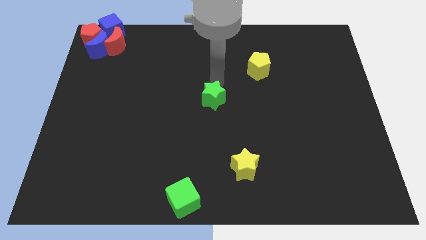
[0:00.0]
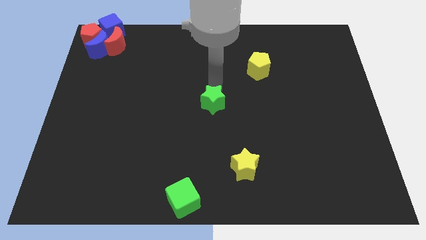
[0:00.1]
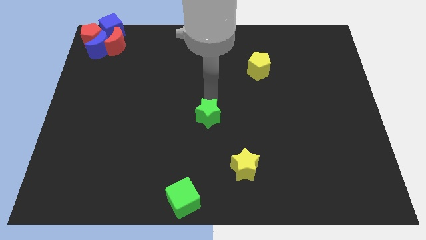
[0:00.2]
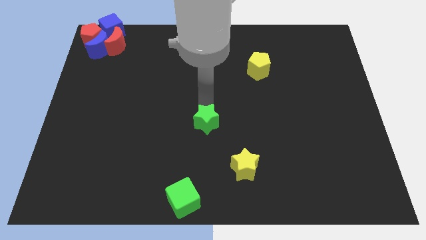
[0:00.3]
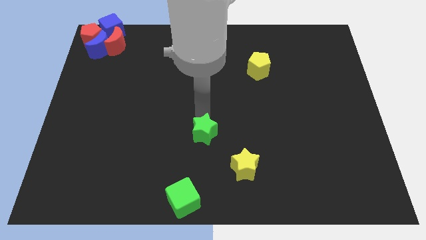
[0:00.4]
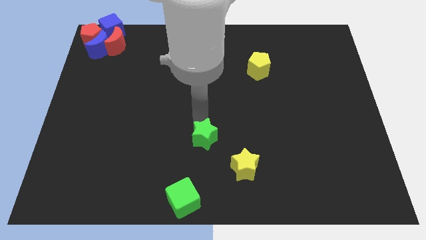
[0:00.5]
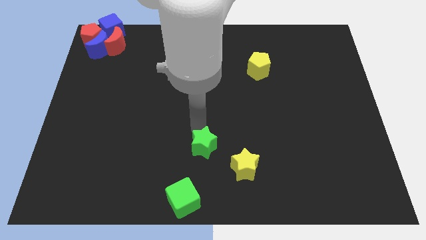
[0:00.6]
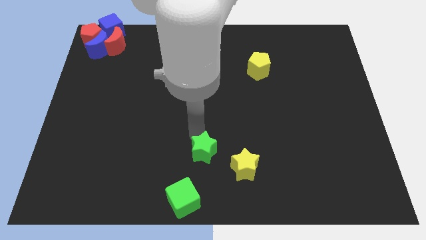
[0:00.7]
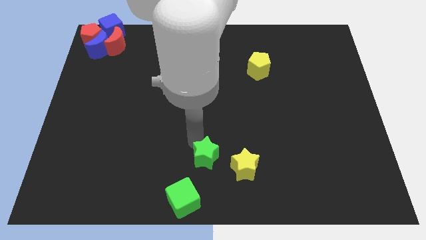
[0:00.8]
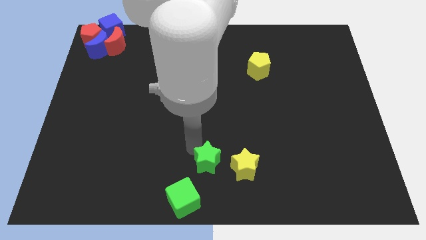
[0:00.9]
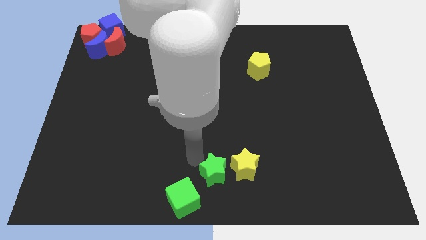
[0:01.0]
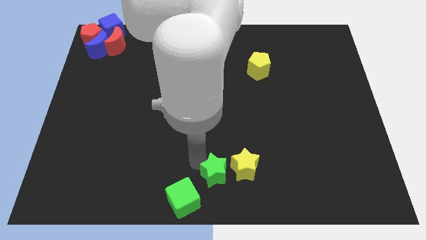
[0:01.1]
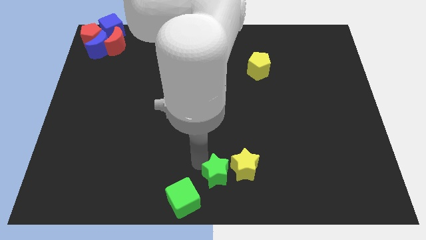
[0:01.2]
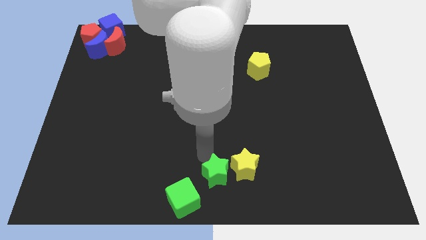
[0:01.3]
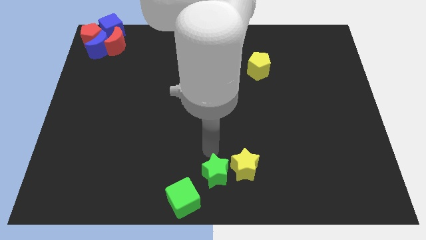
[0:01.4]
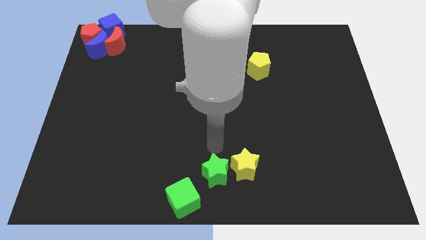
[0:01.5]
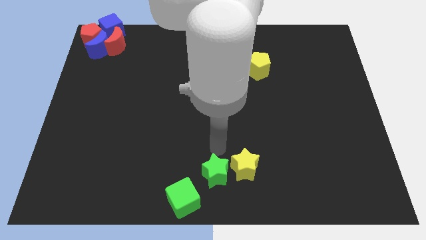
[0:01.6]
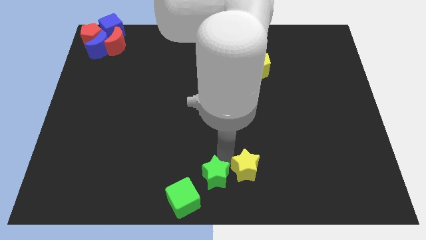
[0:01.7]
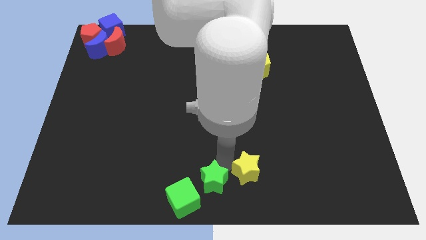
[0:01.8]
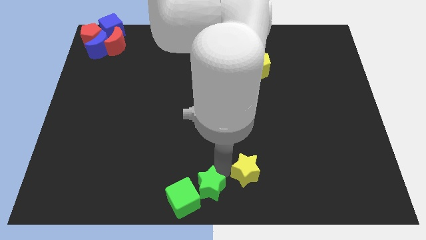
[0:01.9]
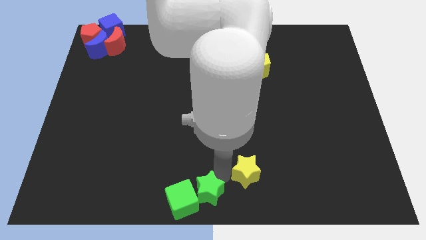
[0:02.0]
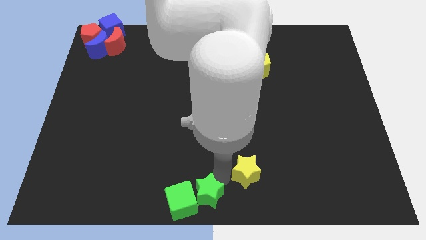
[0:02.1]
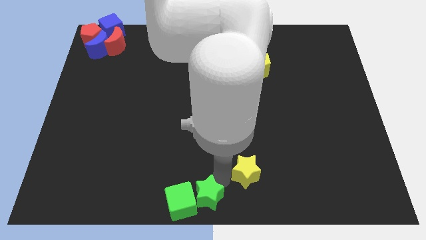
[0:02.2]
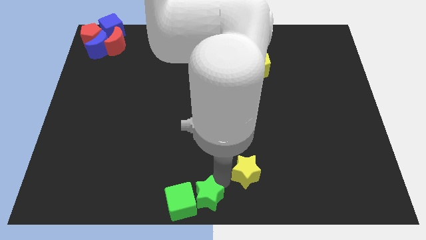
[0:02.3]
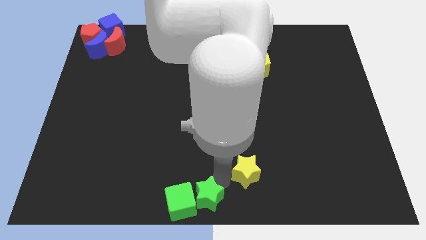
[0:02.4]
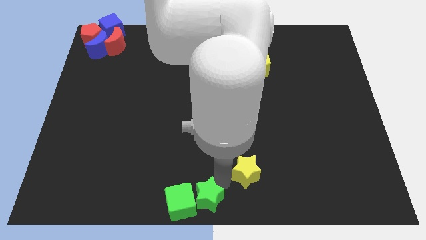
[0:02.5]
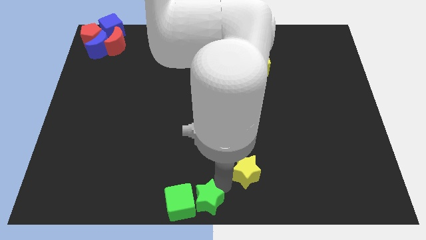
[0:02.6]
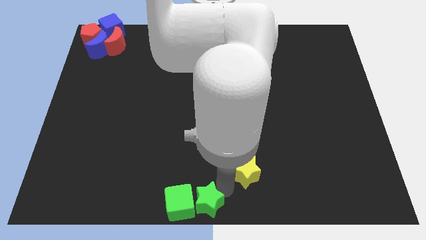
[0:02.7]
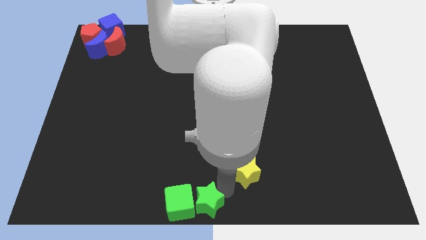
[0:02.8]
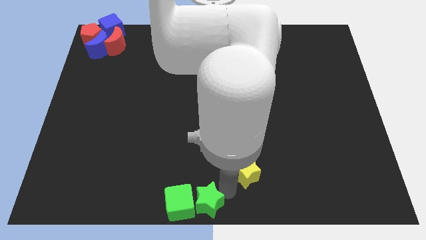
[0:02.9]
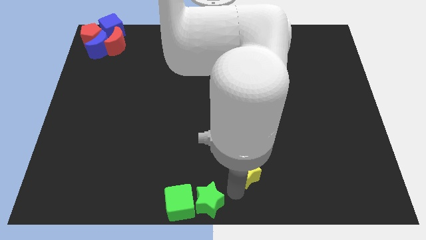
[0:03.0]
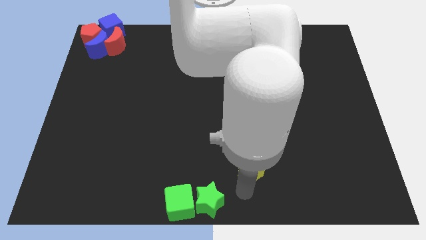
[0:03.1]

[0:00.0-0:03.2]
move the green star into the green cube at the bottom

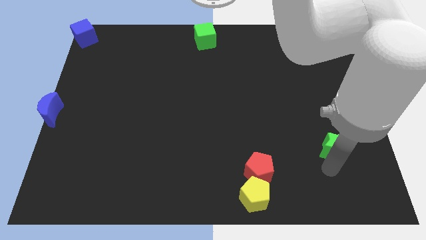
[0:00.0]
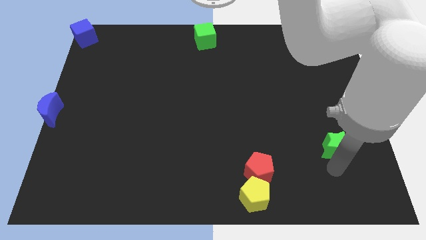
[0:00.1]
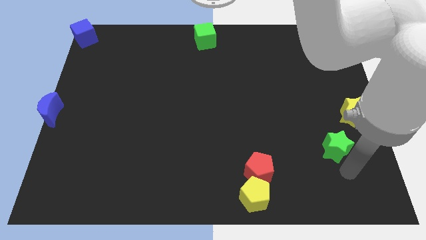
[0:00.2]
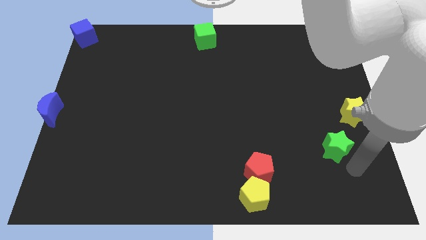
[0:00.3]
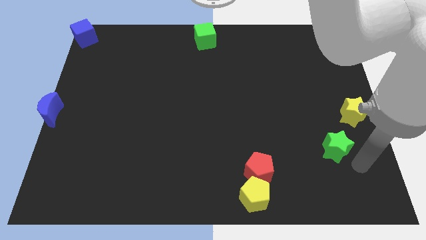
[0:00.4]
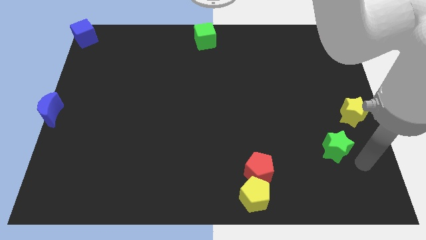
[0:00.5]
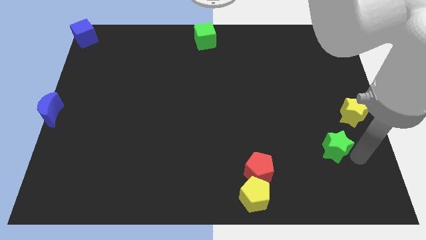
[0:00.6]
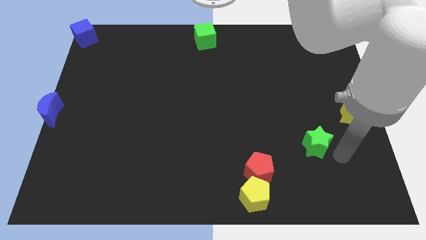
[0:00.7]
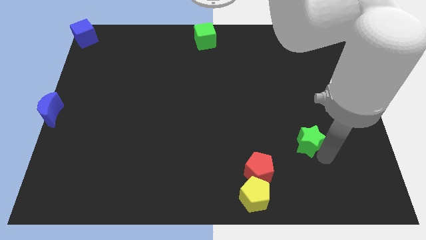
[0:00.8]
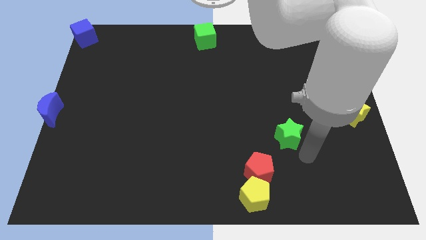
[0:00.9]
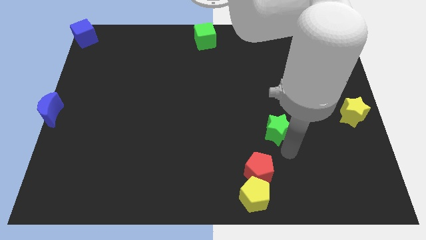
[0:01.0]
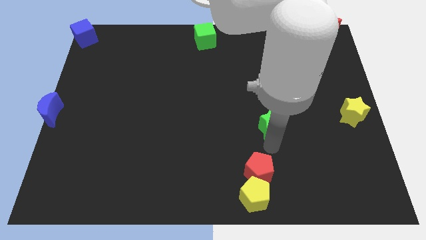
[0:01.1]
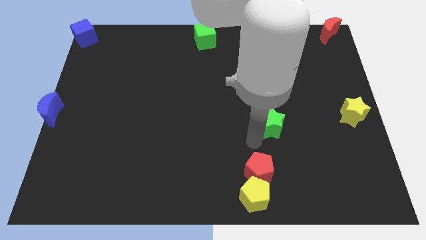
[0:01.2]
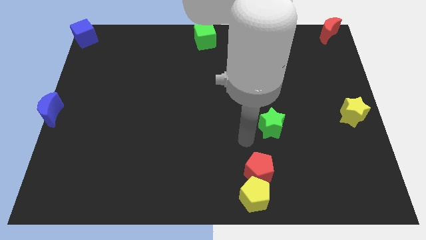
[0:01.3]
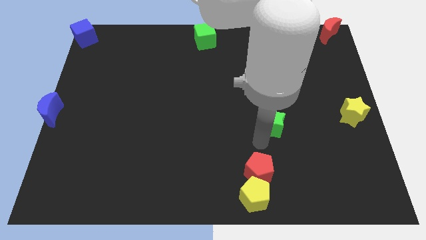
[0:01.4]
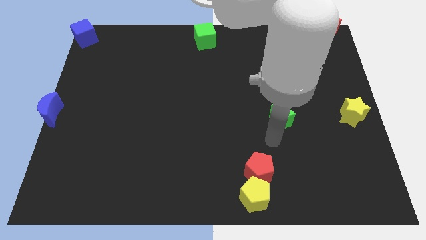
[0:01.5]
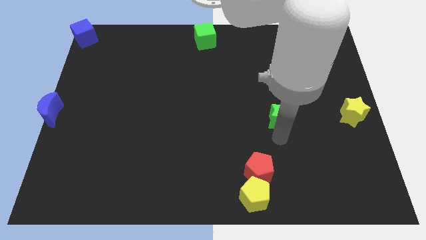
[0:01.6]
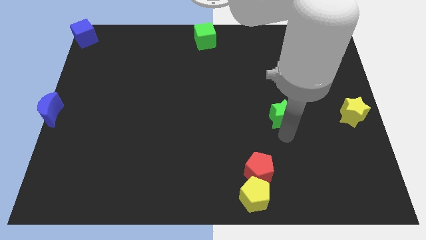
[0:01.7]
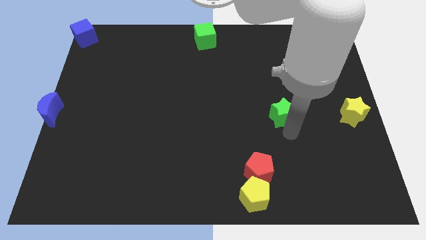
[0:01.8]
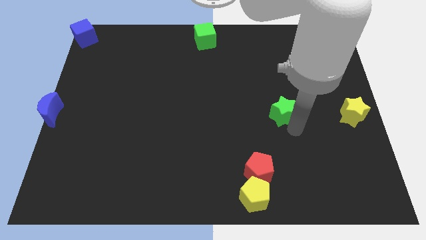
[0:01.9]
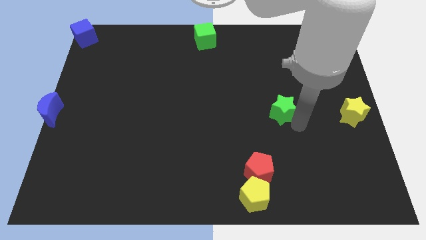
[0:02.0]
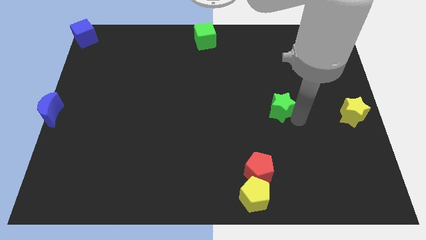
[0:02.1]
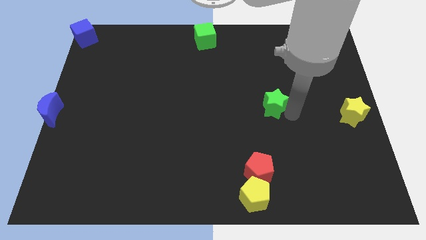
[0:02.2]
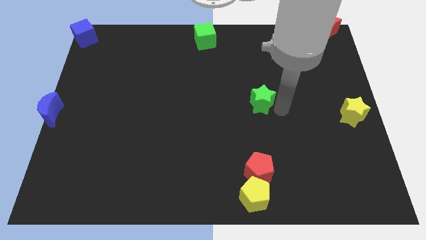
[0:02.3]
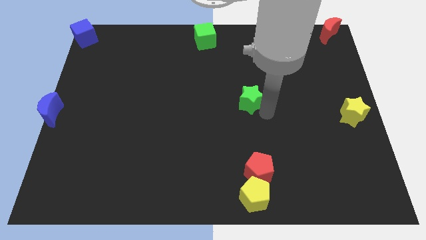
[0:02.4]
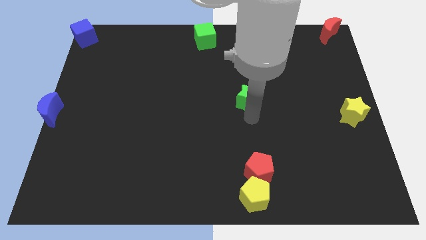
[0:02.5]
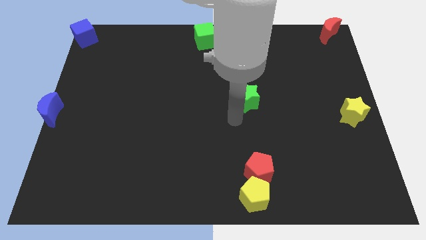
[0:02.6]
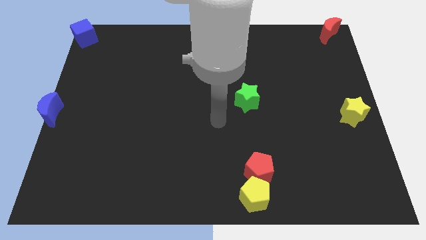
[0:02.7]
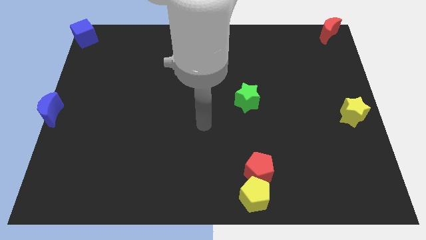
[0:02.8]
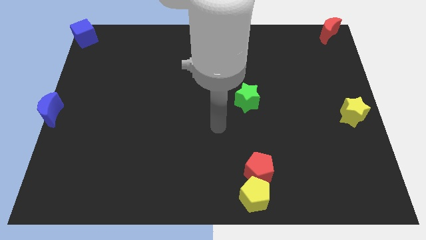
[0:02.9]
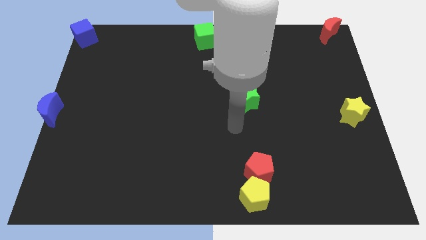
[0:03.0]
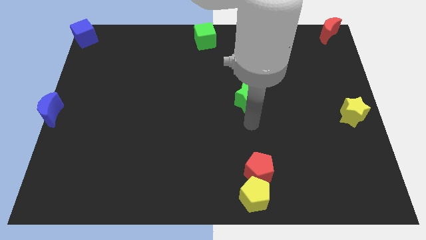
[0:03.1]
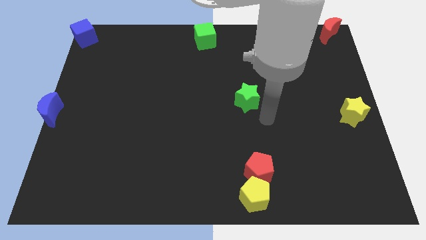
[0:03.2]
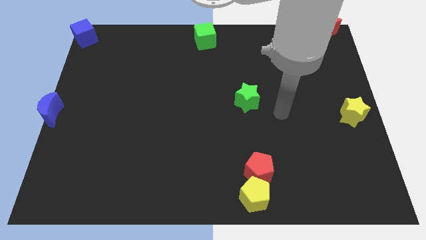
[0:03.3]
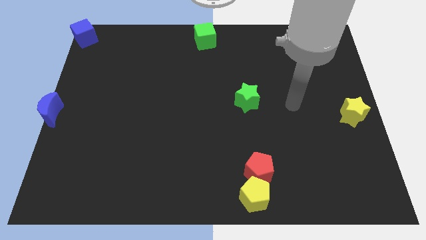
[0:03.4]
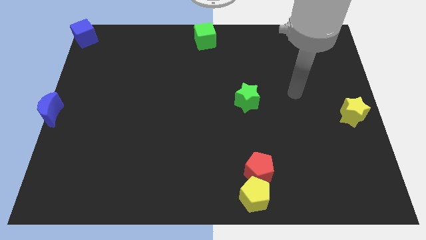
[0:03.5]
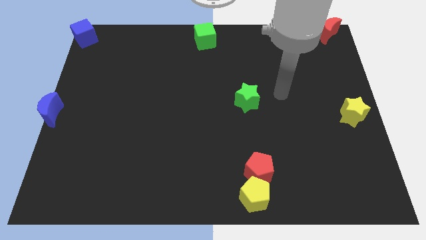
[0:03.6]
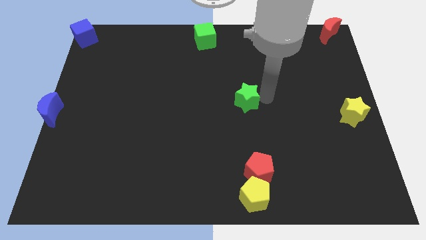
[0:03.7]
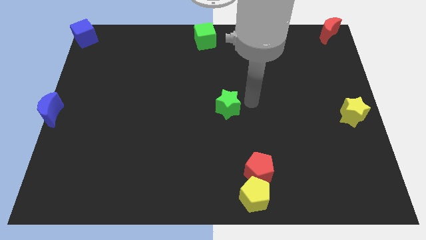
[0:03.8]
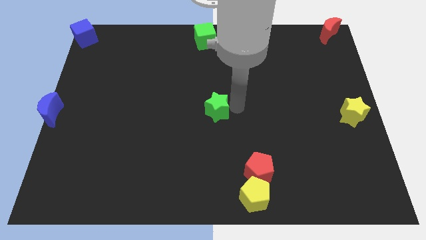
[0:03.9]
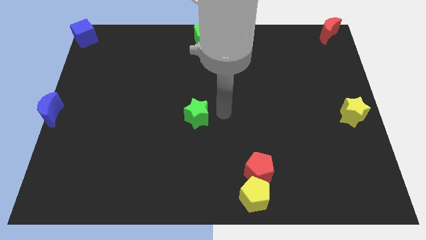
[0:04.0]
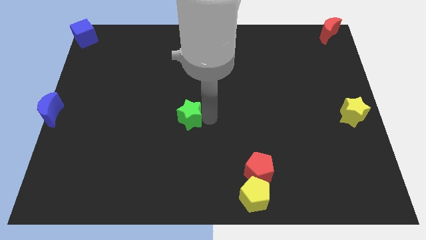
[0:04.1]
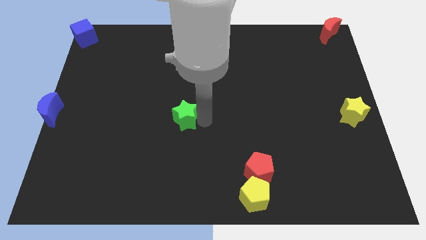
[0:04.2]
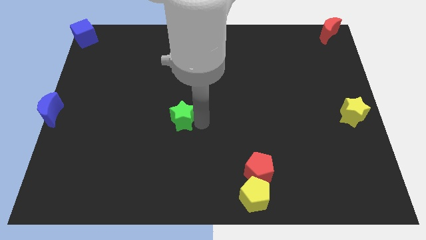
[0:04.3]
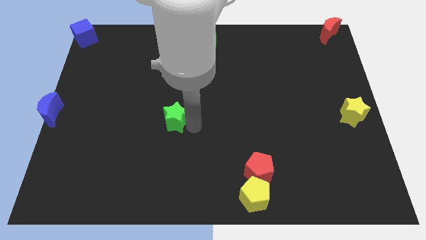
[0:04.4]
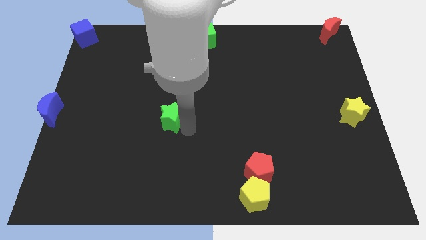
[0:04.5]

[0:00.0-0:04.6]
place the green star to the center

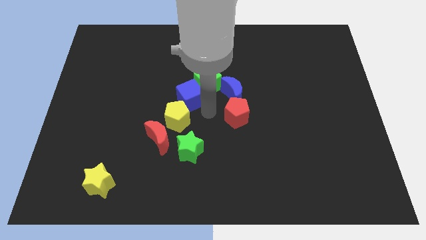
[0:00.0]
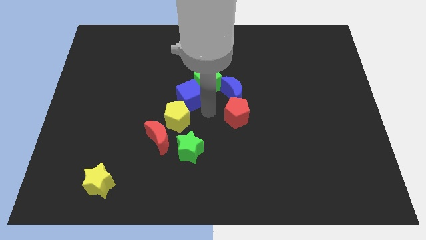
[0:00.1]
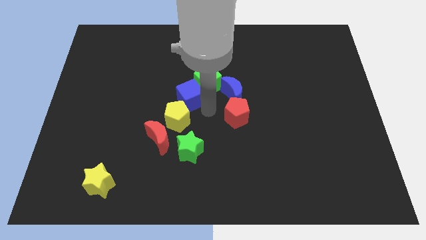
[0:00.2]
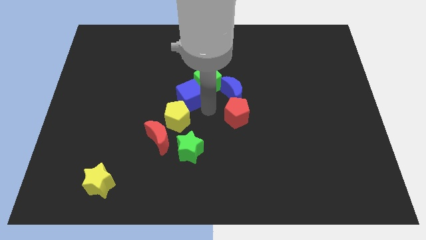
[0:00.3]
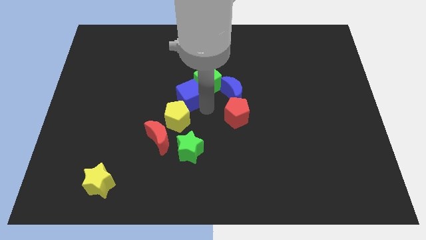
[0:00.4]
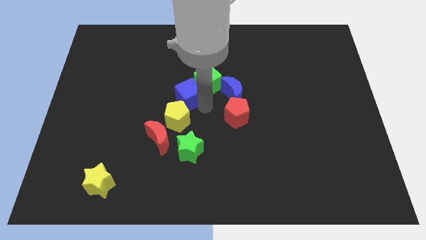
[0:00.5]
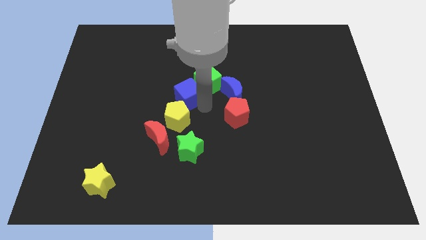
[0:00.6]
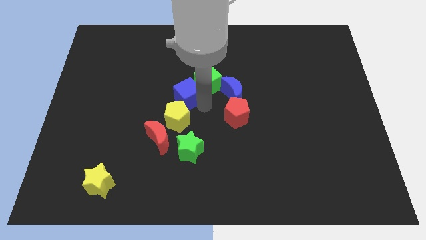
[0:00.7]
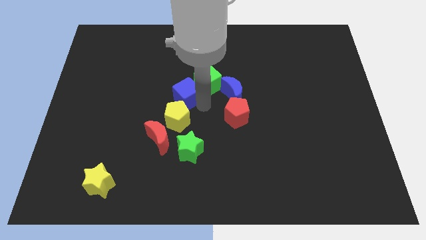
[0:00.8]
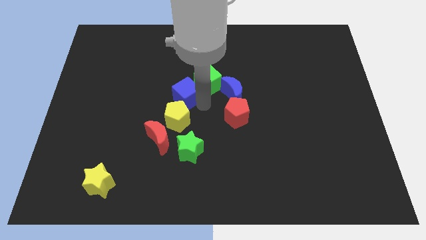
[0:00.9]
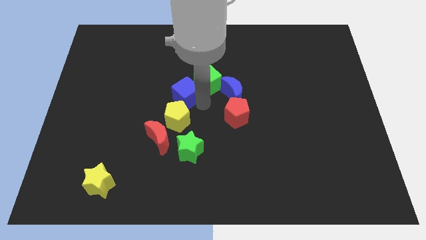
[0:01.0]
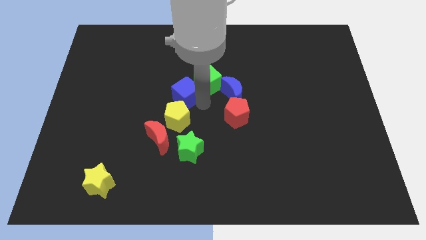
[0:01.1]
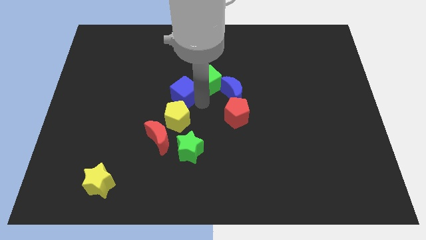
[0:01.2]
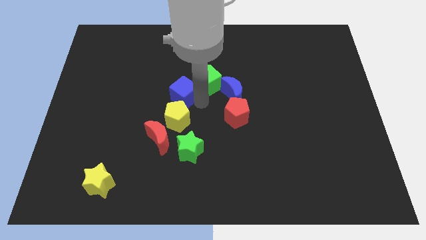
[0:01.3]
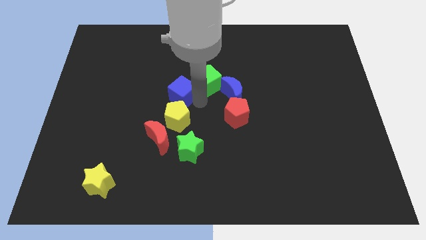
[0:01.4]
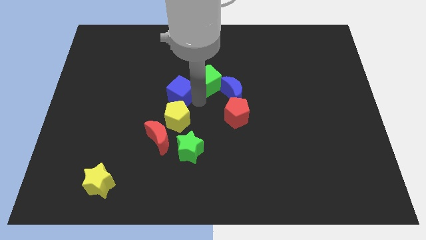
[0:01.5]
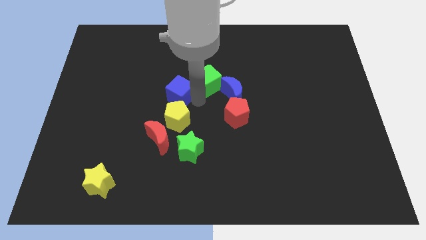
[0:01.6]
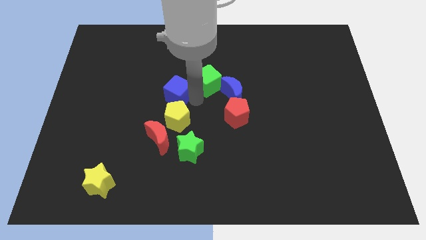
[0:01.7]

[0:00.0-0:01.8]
move slightly the blue cube to the left side of the table
